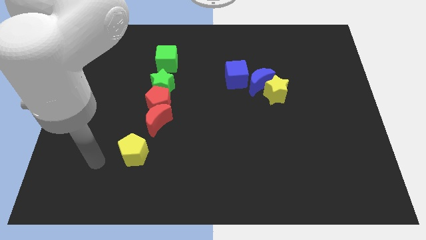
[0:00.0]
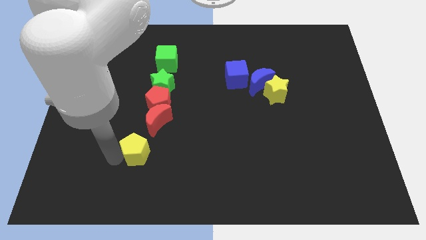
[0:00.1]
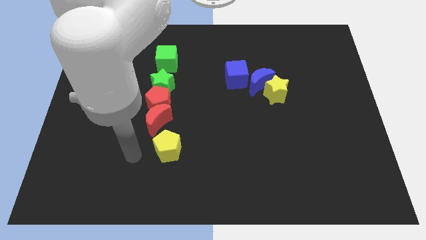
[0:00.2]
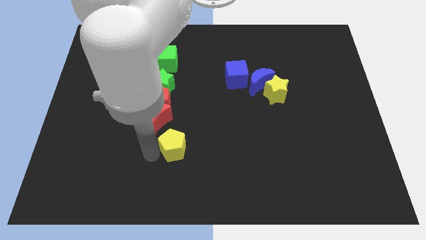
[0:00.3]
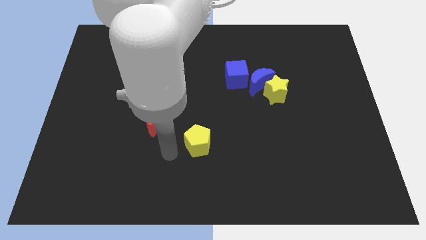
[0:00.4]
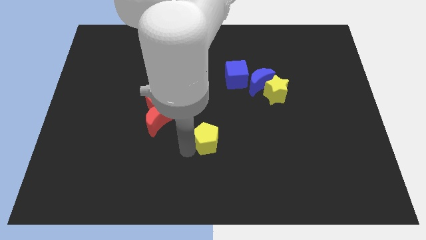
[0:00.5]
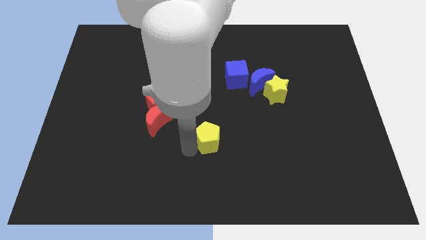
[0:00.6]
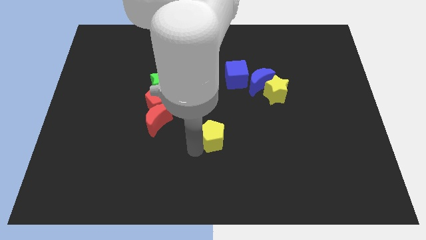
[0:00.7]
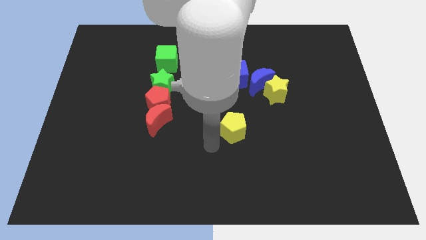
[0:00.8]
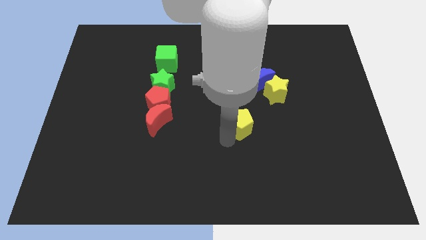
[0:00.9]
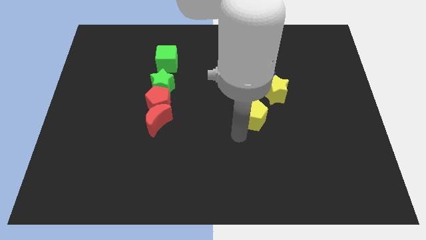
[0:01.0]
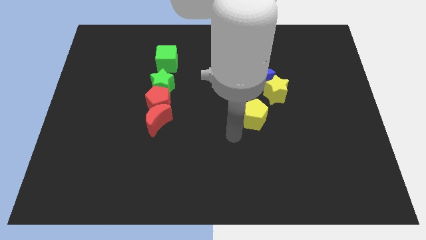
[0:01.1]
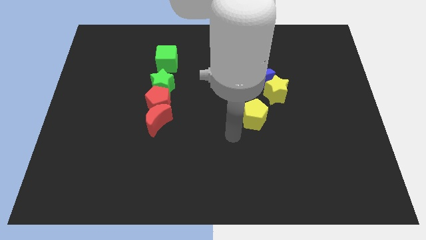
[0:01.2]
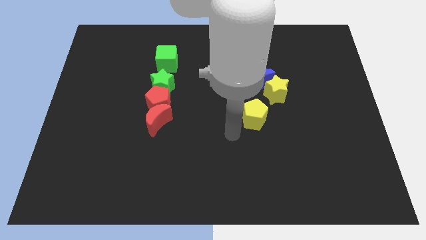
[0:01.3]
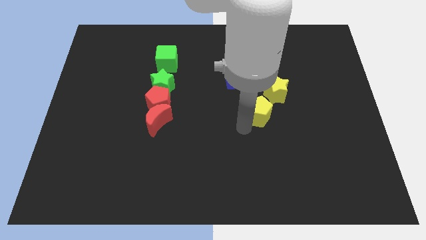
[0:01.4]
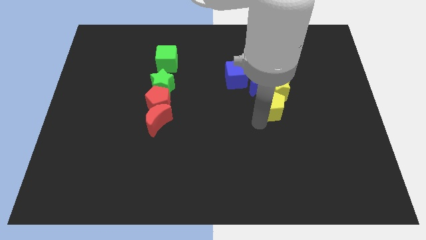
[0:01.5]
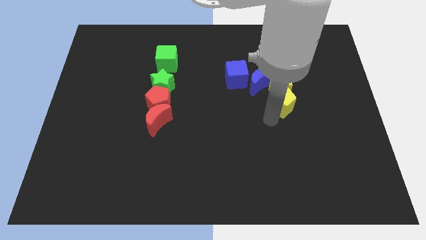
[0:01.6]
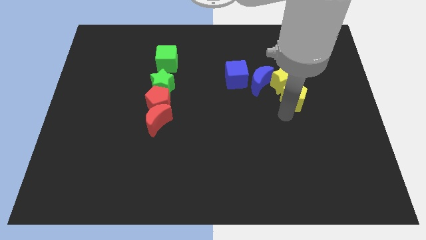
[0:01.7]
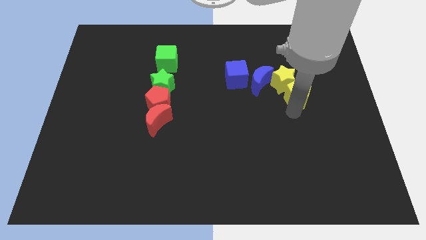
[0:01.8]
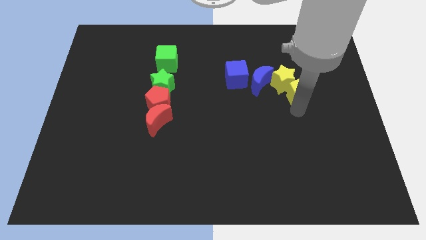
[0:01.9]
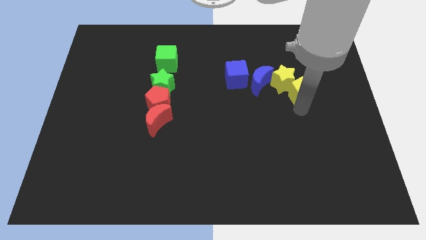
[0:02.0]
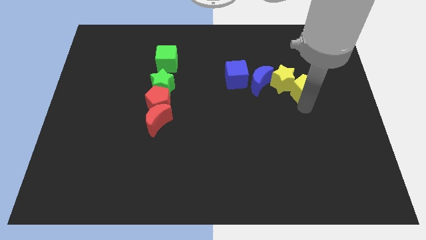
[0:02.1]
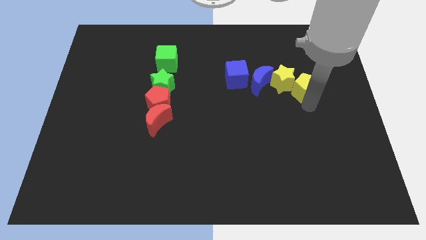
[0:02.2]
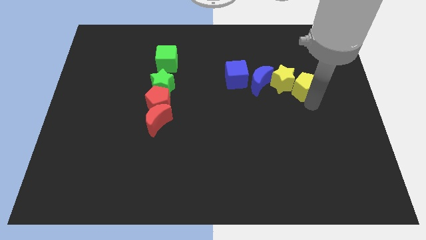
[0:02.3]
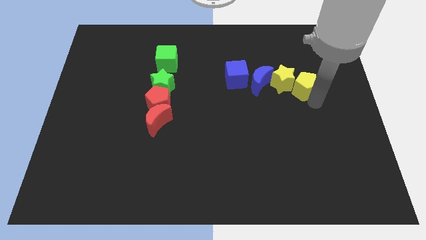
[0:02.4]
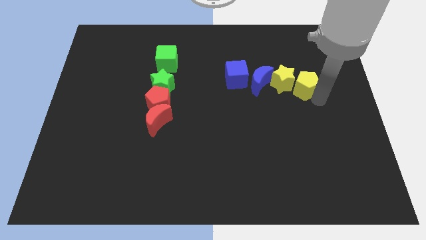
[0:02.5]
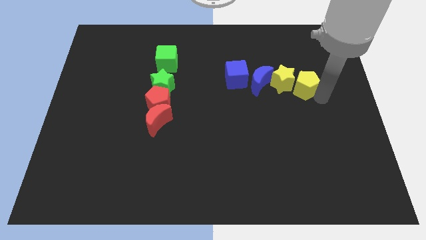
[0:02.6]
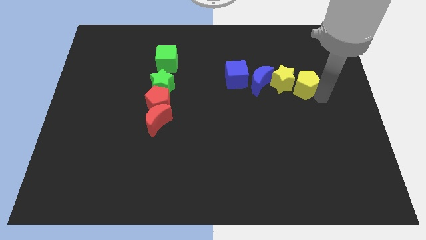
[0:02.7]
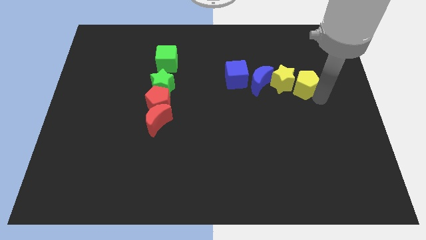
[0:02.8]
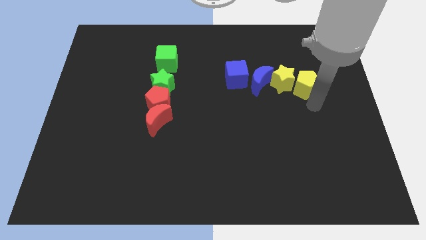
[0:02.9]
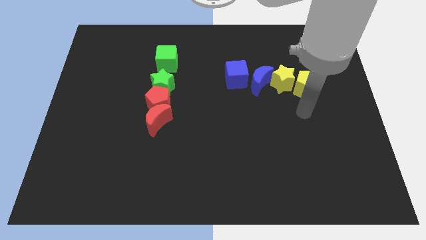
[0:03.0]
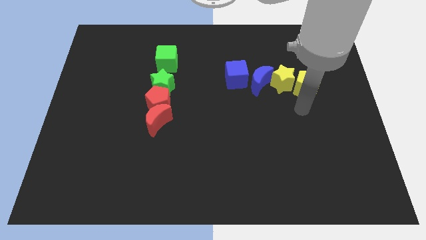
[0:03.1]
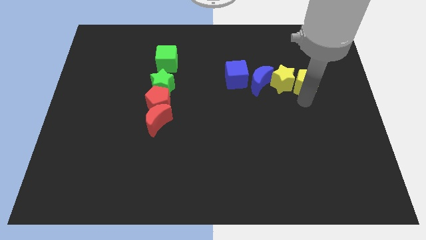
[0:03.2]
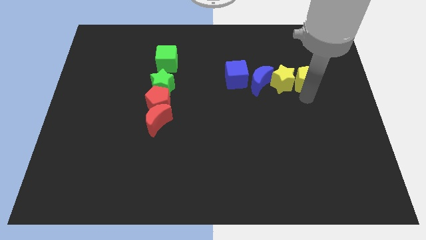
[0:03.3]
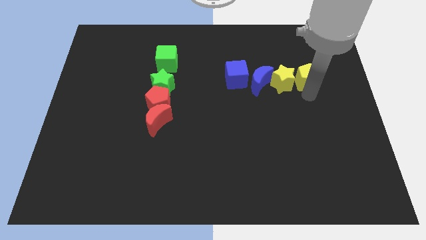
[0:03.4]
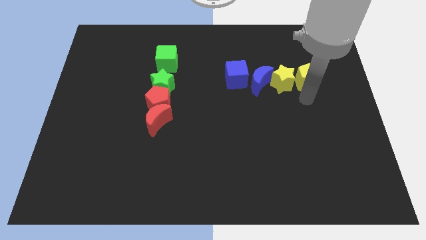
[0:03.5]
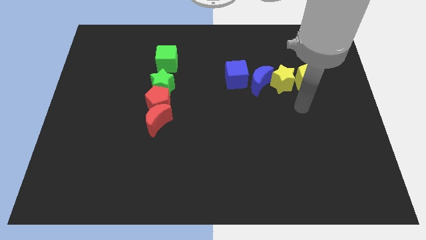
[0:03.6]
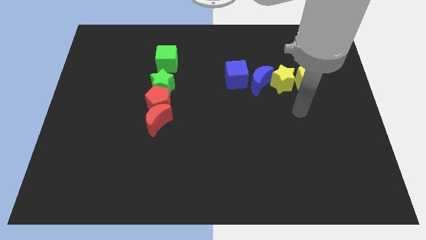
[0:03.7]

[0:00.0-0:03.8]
move the yellow pentagon to the right of the yellow star

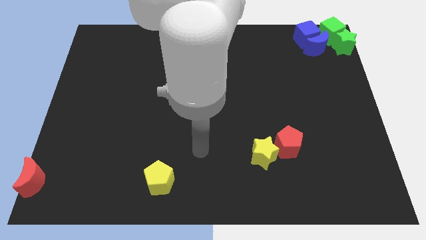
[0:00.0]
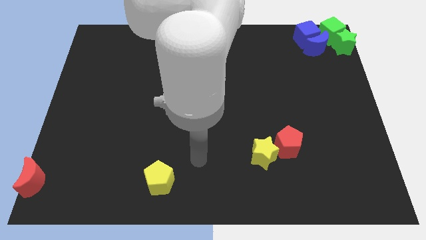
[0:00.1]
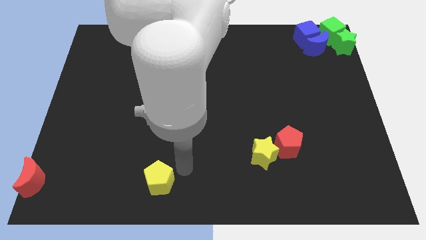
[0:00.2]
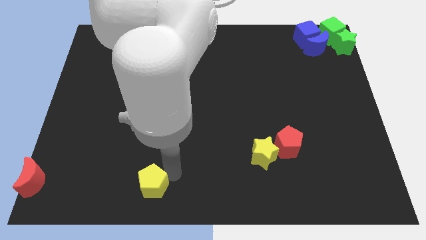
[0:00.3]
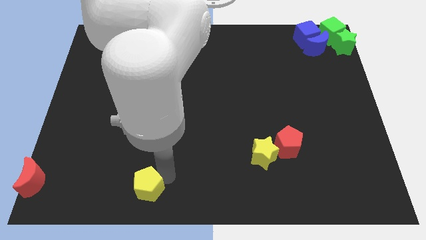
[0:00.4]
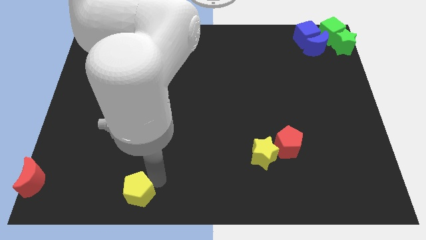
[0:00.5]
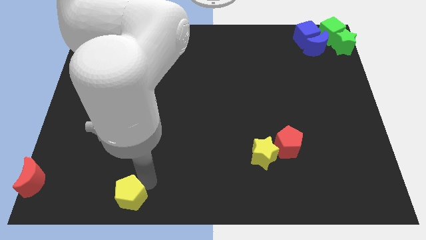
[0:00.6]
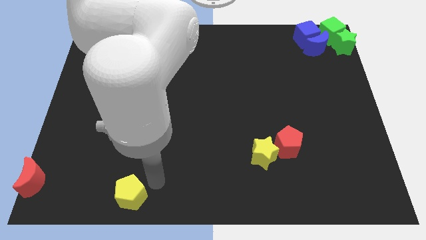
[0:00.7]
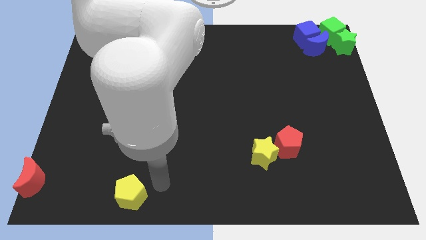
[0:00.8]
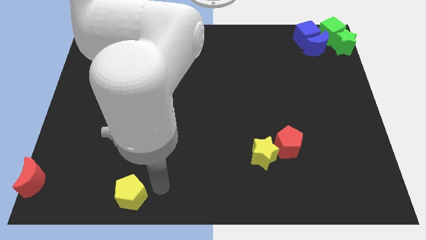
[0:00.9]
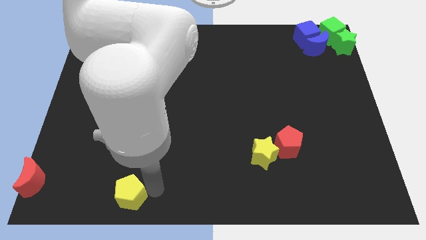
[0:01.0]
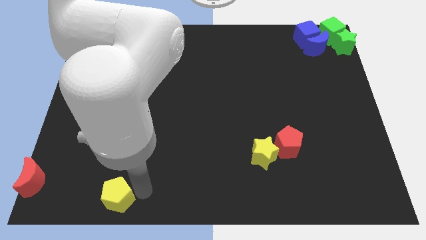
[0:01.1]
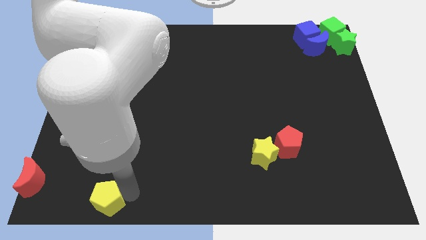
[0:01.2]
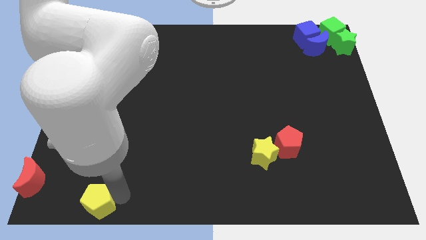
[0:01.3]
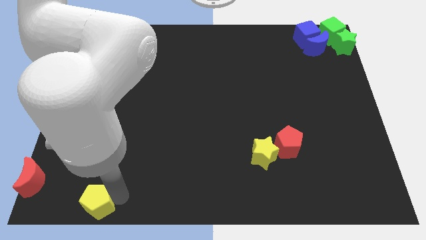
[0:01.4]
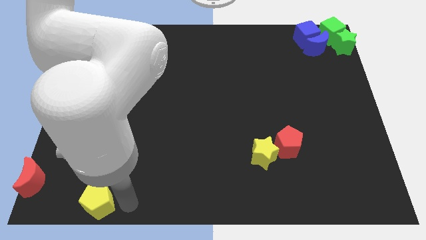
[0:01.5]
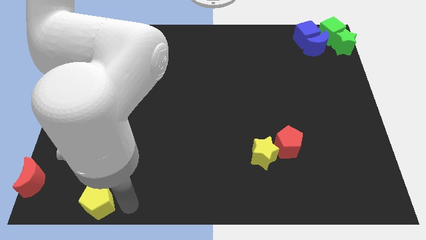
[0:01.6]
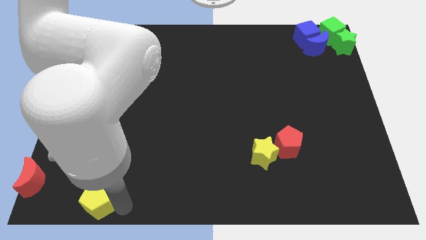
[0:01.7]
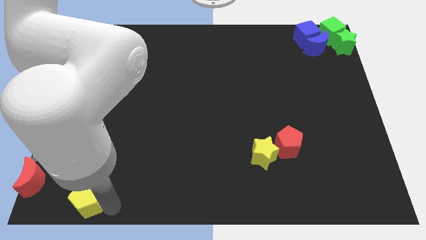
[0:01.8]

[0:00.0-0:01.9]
slide the yellow pentagon diagonally on the bottom right side of the red crescent

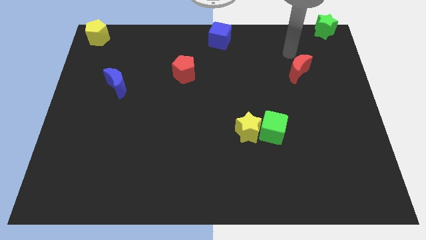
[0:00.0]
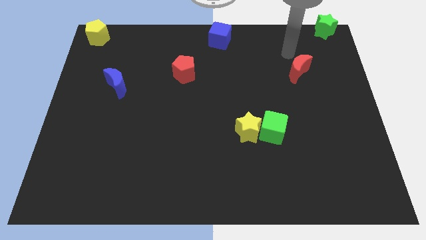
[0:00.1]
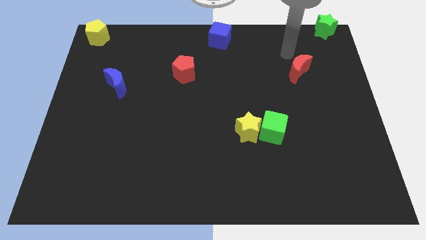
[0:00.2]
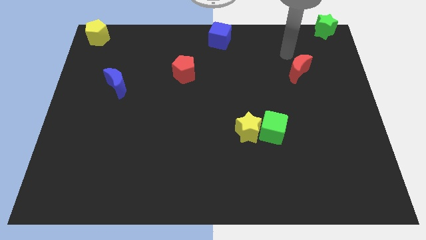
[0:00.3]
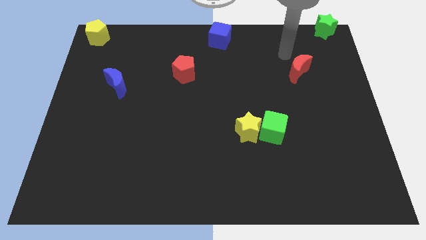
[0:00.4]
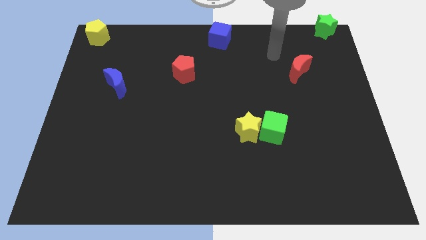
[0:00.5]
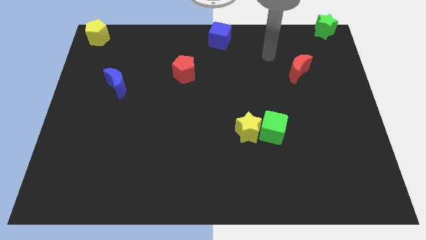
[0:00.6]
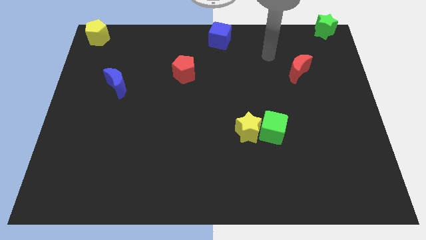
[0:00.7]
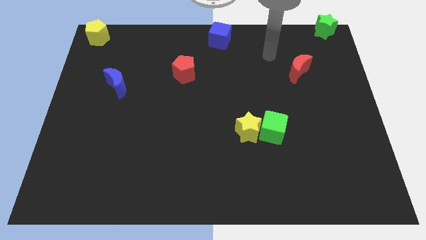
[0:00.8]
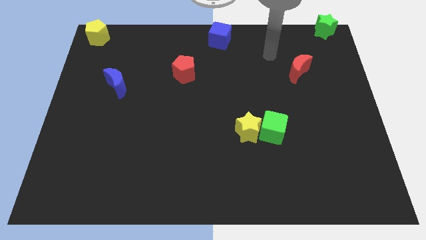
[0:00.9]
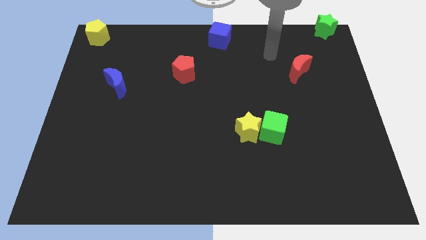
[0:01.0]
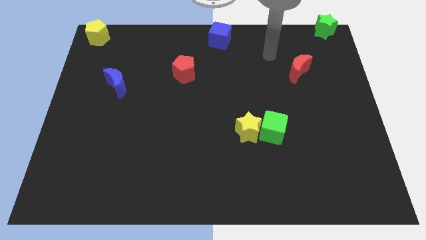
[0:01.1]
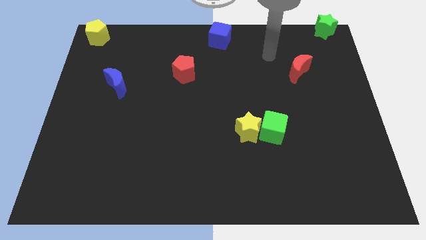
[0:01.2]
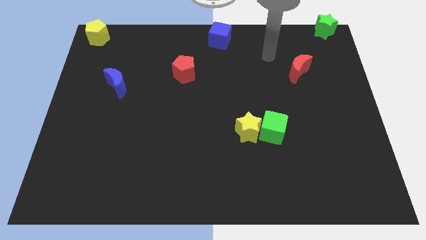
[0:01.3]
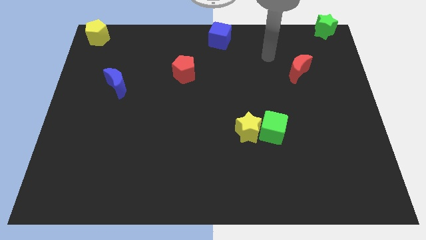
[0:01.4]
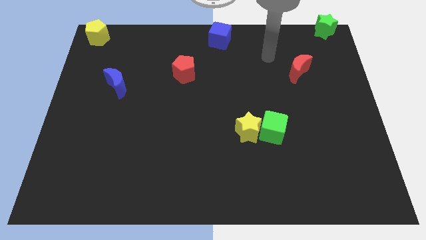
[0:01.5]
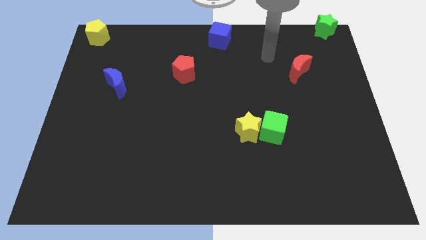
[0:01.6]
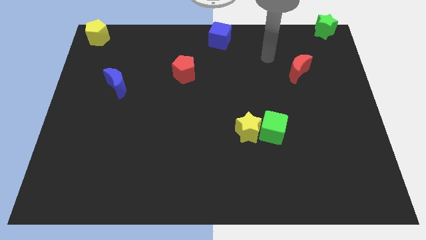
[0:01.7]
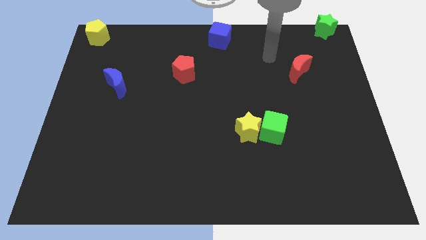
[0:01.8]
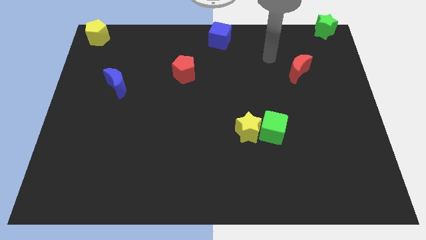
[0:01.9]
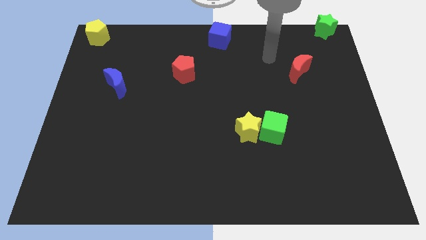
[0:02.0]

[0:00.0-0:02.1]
move your arm between red moon and blue cube

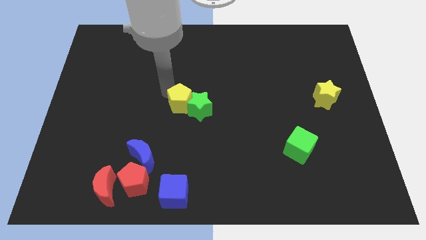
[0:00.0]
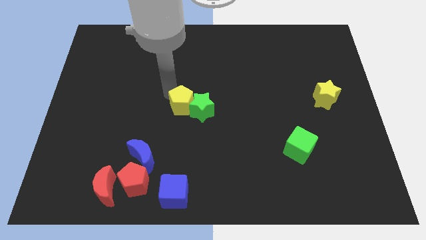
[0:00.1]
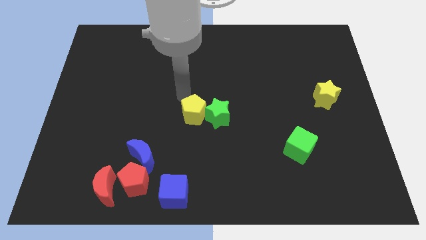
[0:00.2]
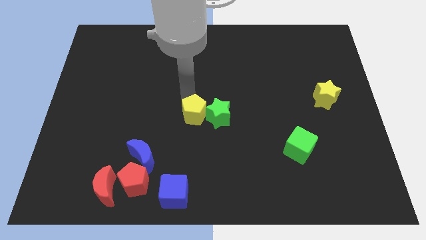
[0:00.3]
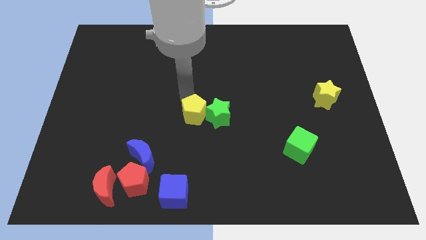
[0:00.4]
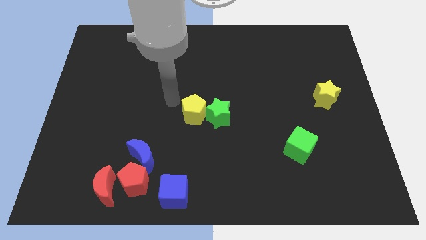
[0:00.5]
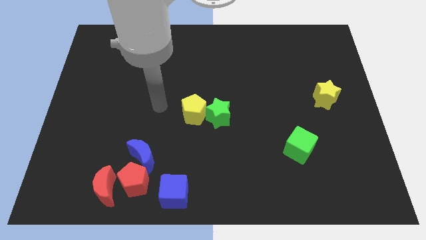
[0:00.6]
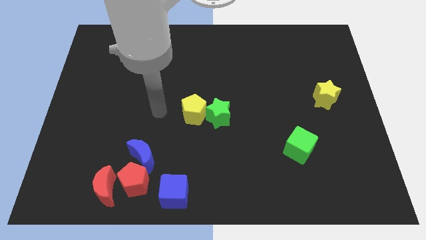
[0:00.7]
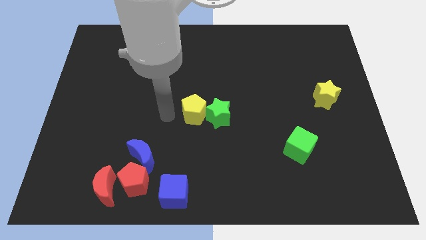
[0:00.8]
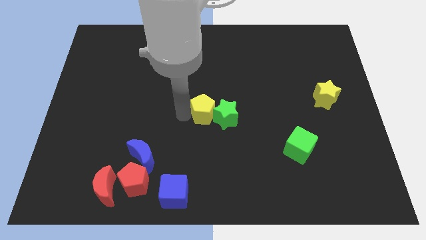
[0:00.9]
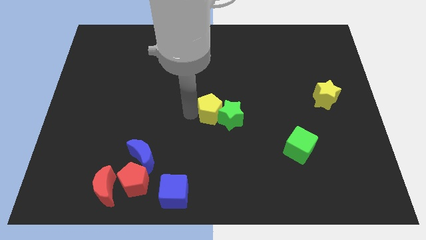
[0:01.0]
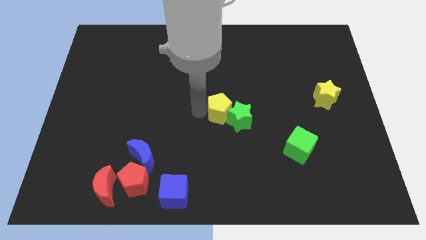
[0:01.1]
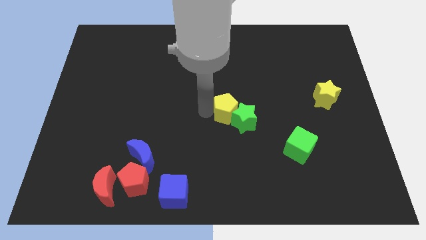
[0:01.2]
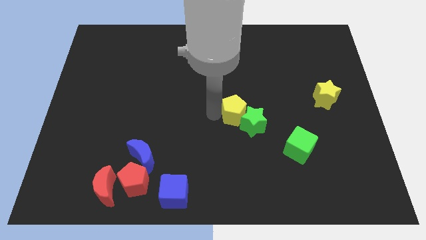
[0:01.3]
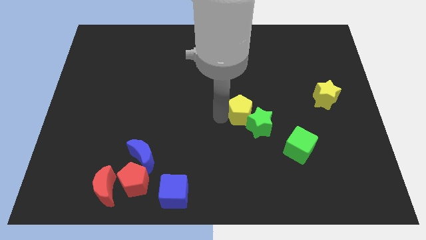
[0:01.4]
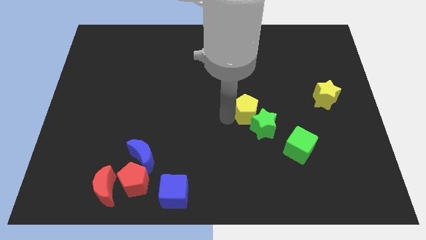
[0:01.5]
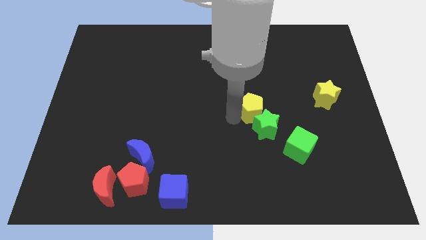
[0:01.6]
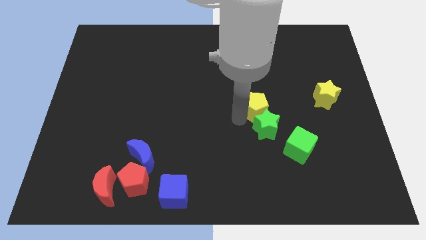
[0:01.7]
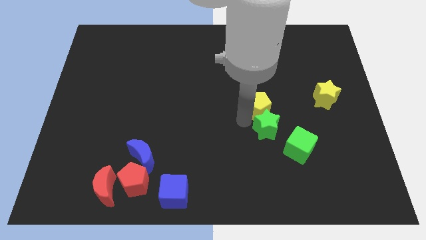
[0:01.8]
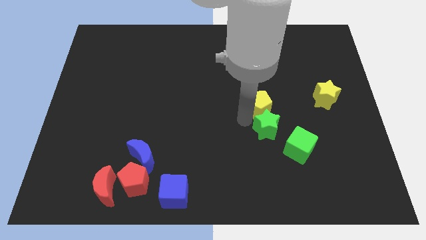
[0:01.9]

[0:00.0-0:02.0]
push the yellow pentagon into the green star
